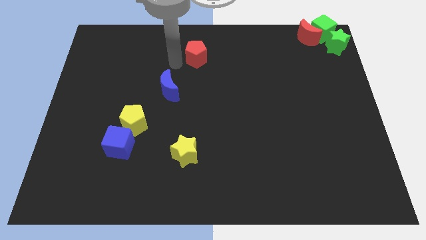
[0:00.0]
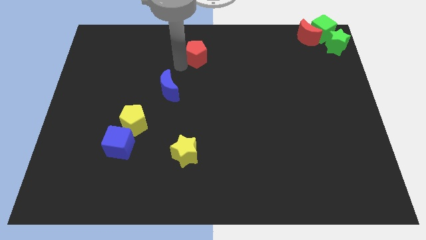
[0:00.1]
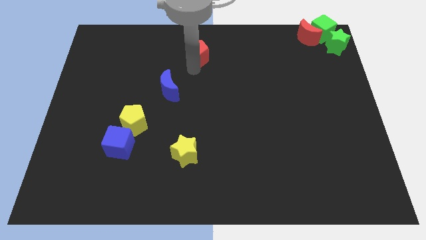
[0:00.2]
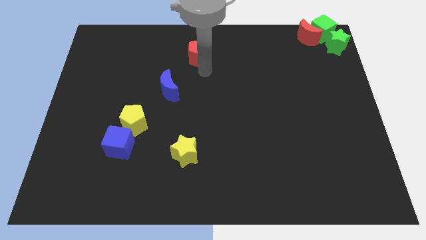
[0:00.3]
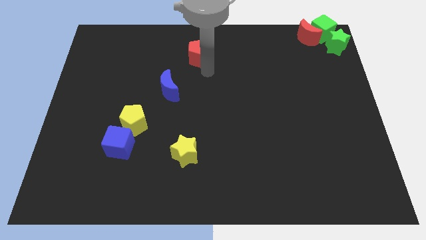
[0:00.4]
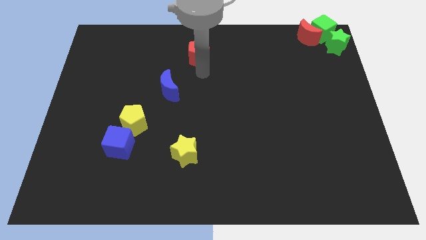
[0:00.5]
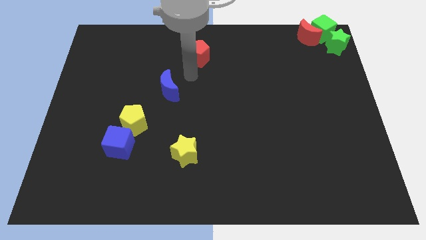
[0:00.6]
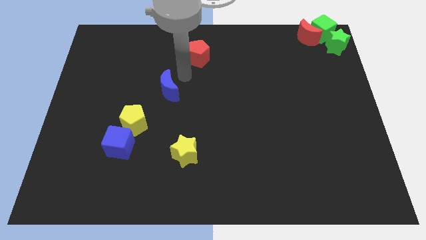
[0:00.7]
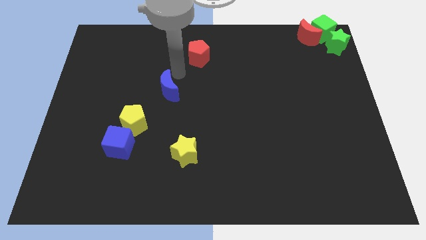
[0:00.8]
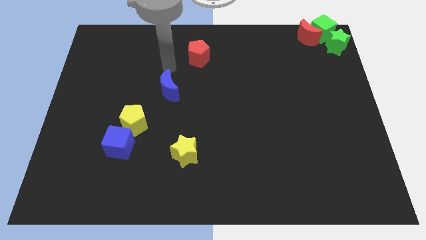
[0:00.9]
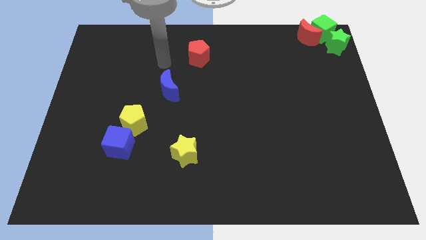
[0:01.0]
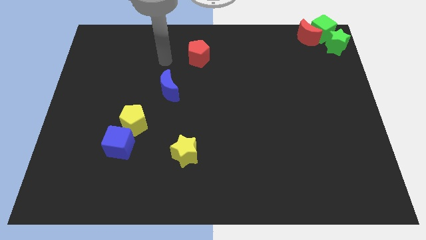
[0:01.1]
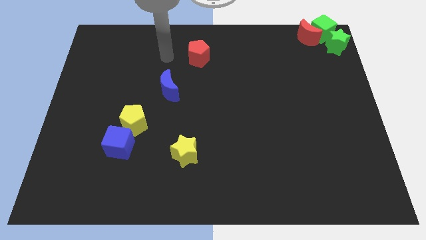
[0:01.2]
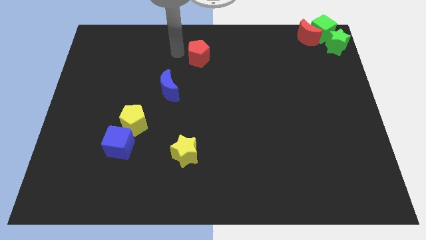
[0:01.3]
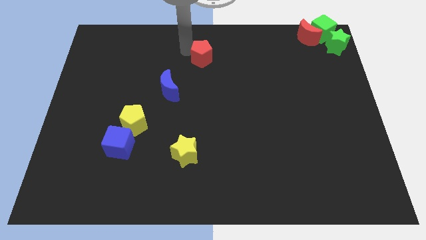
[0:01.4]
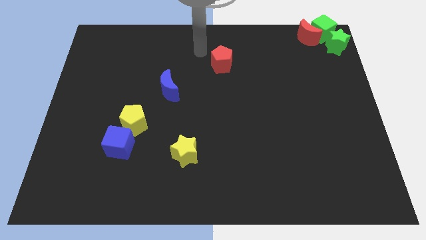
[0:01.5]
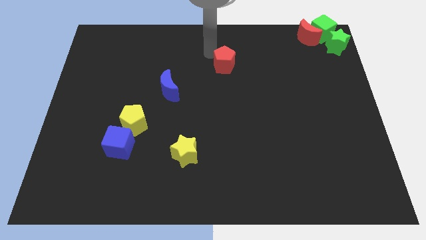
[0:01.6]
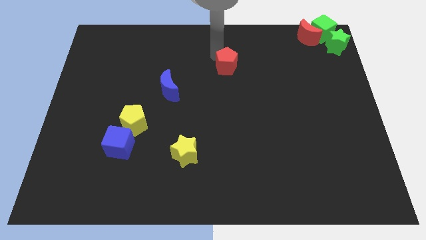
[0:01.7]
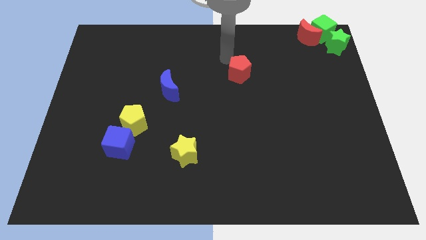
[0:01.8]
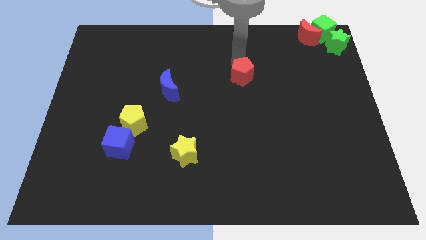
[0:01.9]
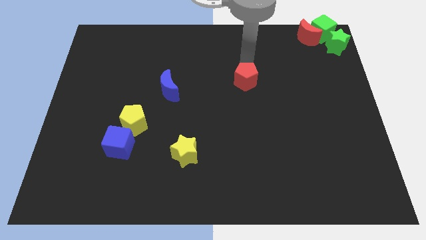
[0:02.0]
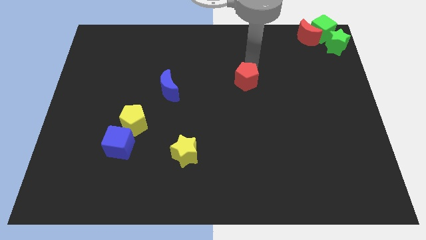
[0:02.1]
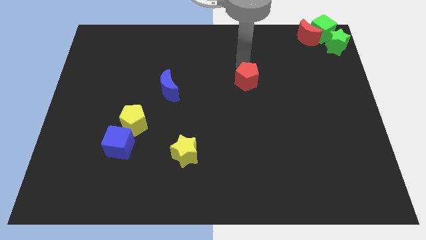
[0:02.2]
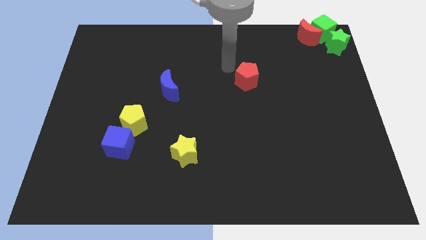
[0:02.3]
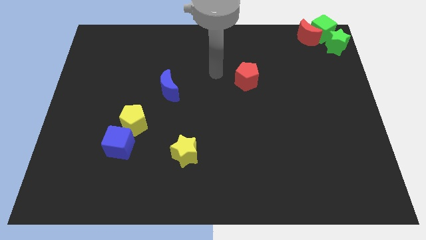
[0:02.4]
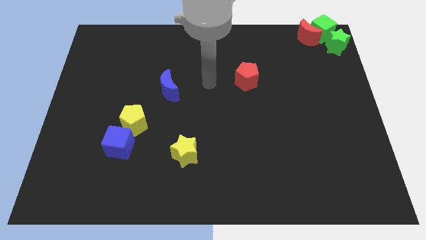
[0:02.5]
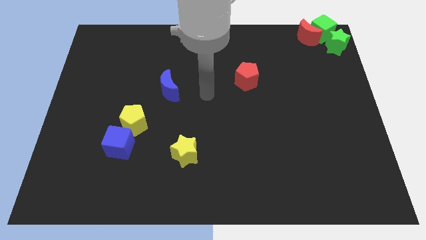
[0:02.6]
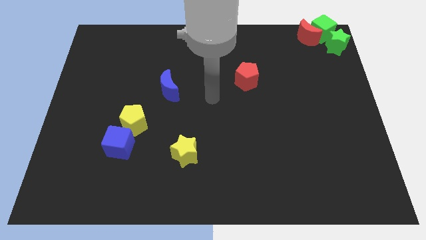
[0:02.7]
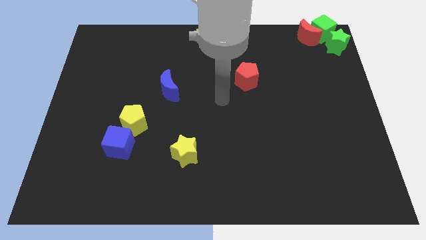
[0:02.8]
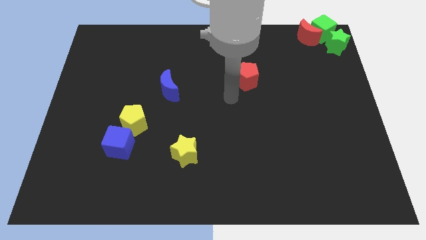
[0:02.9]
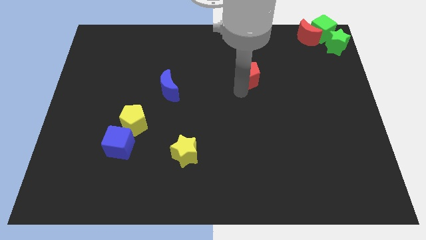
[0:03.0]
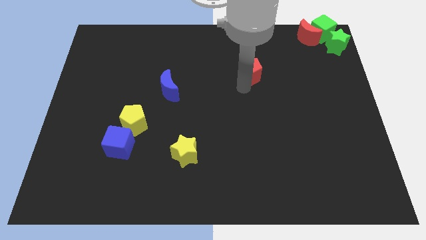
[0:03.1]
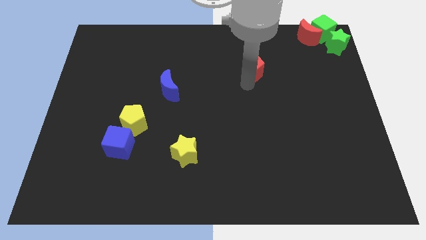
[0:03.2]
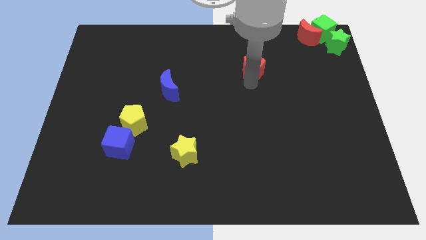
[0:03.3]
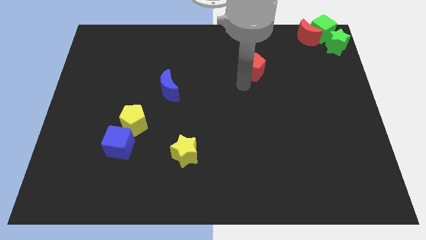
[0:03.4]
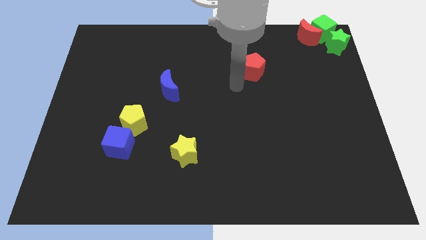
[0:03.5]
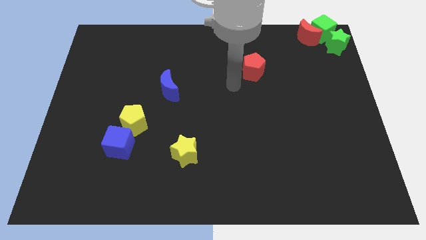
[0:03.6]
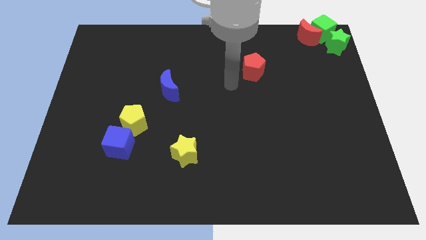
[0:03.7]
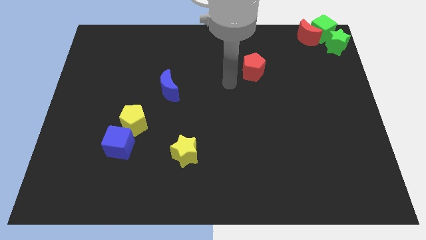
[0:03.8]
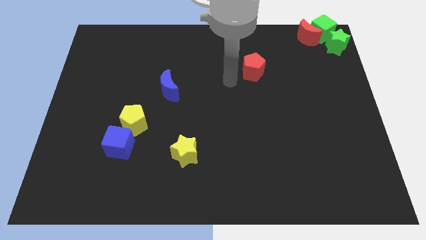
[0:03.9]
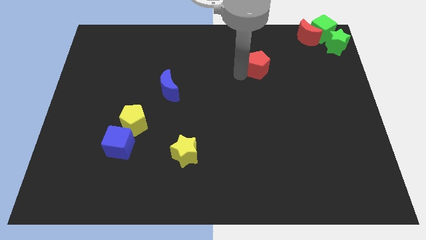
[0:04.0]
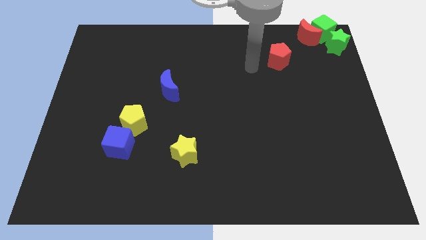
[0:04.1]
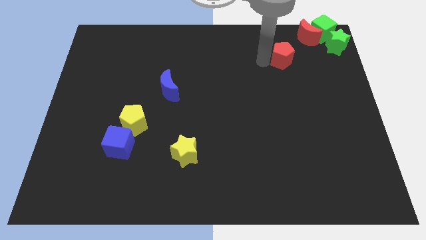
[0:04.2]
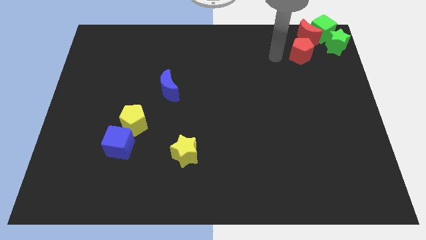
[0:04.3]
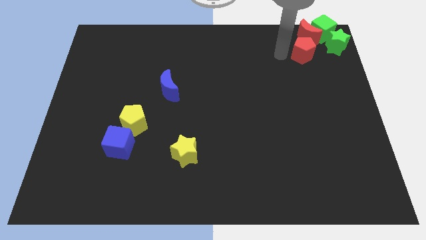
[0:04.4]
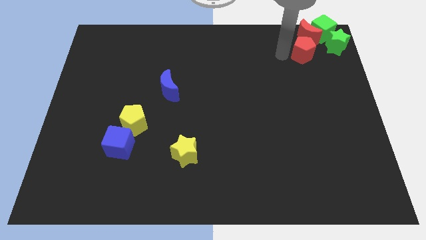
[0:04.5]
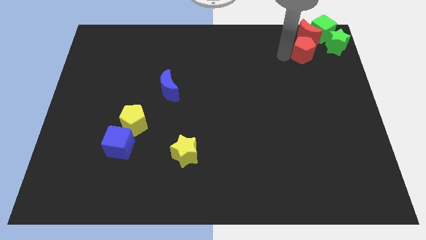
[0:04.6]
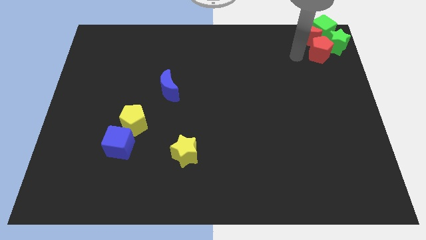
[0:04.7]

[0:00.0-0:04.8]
push the red pentagon to the bottom of the red crescent

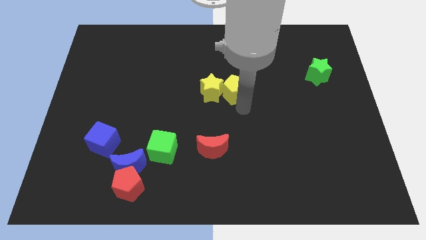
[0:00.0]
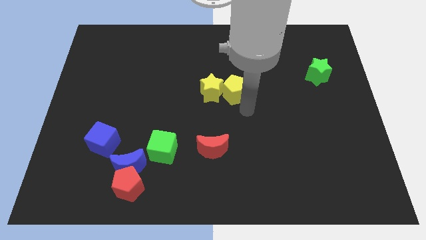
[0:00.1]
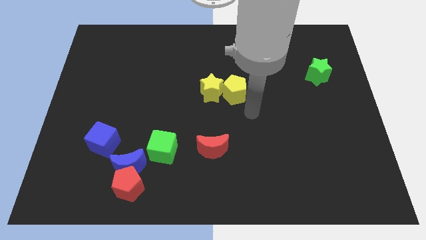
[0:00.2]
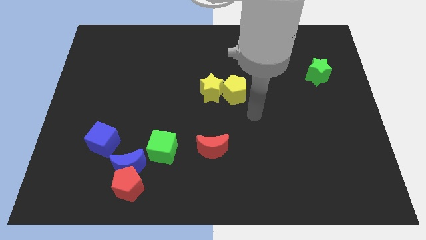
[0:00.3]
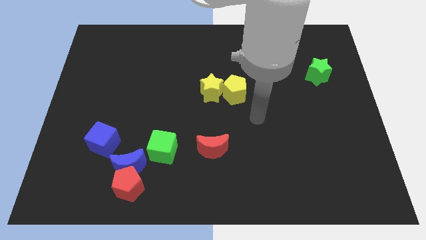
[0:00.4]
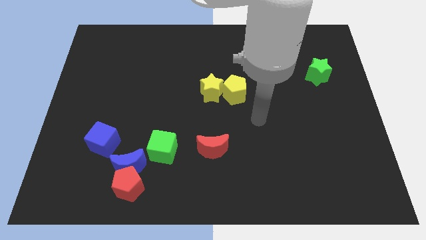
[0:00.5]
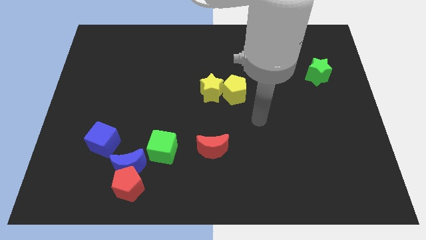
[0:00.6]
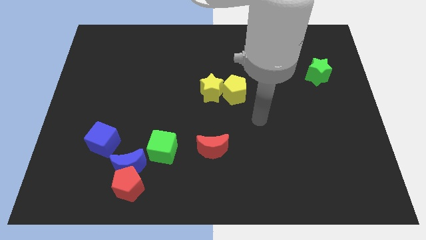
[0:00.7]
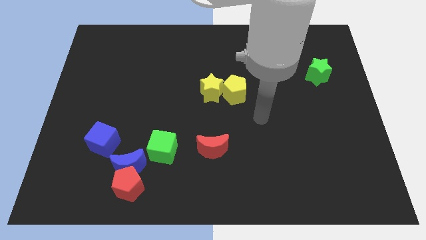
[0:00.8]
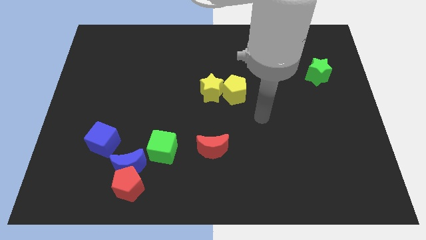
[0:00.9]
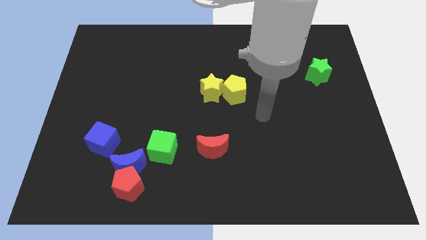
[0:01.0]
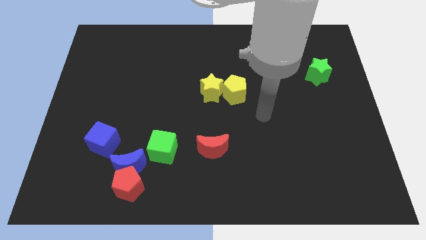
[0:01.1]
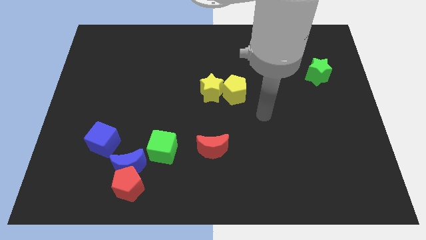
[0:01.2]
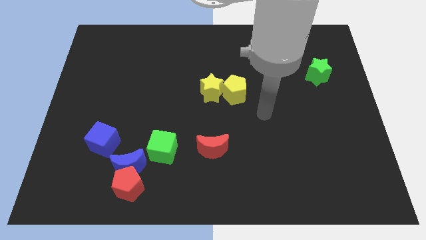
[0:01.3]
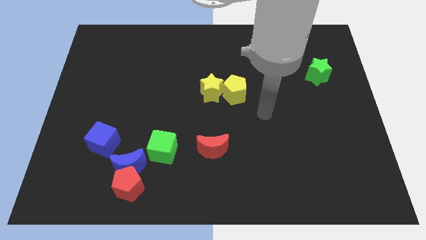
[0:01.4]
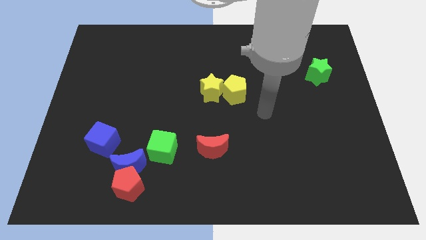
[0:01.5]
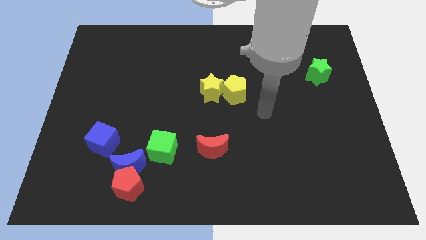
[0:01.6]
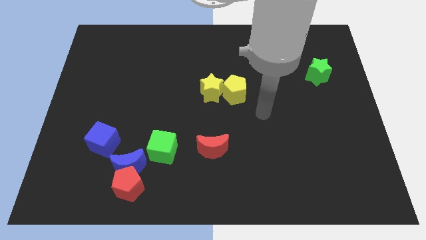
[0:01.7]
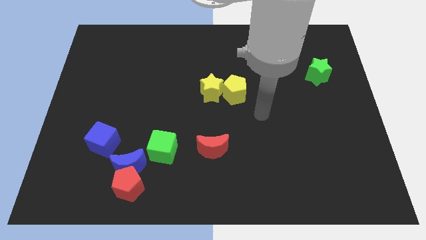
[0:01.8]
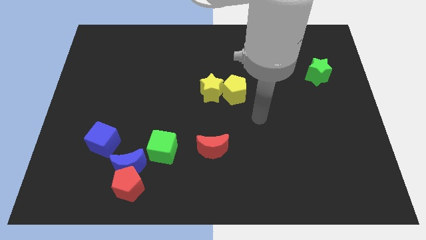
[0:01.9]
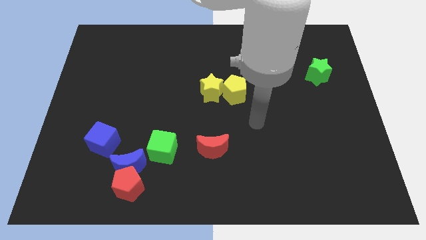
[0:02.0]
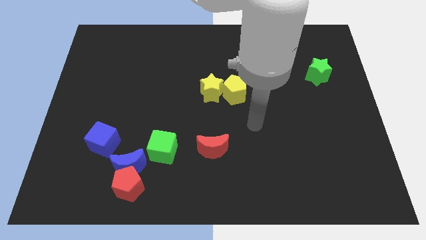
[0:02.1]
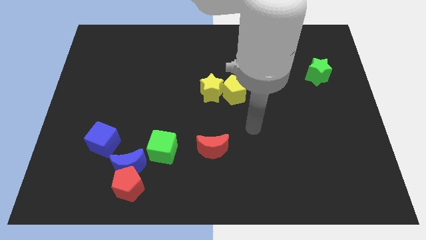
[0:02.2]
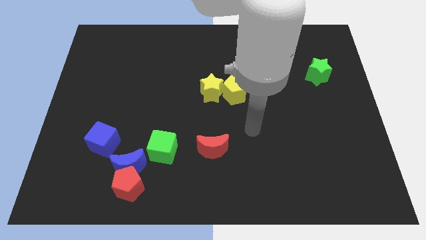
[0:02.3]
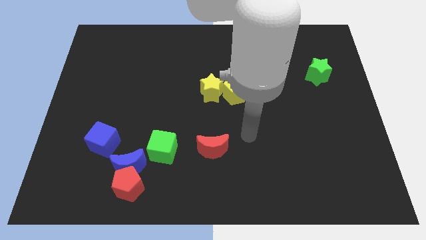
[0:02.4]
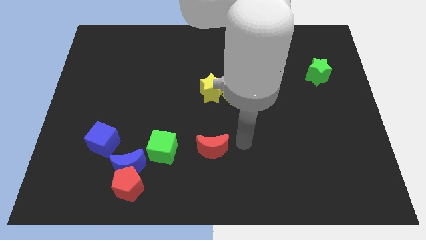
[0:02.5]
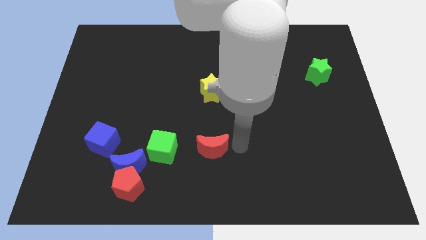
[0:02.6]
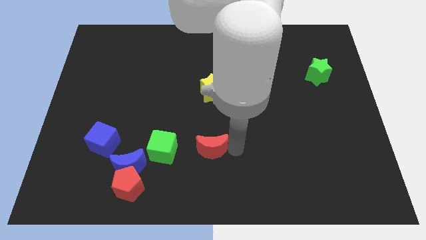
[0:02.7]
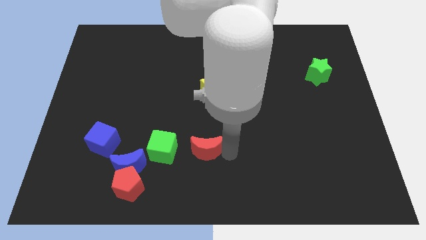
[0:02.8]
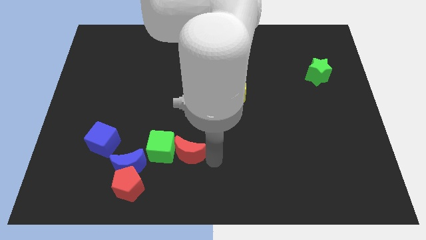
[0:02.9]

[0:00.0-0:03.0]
move your arm towards the red crescent

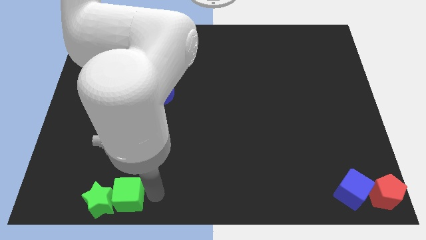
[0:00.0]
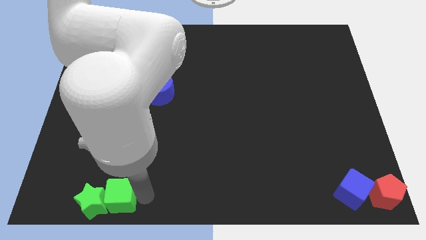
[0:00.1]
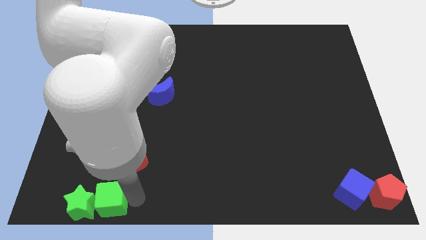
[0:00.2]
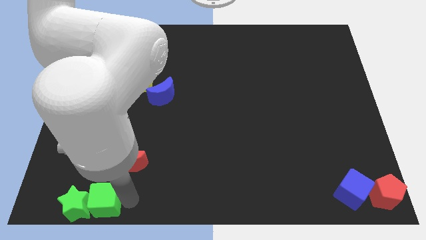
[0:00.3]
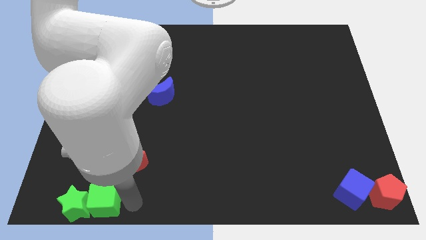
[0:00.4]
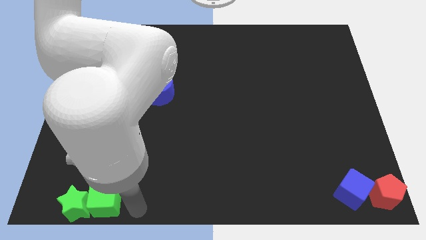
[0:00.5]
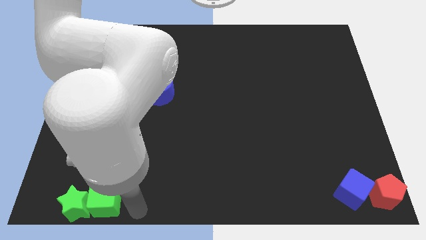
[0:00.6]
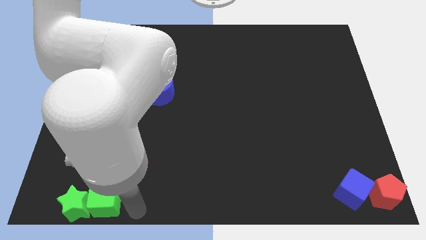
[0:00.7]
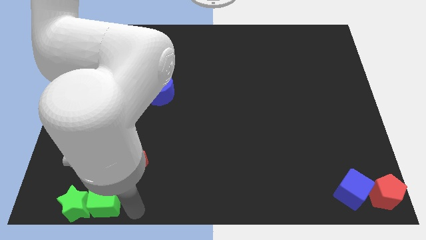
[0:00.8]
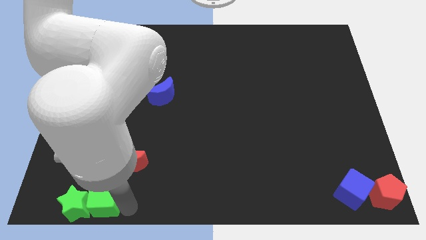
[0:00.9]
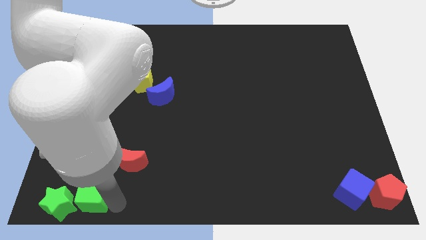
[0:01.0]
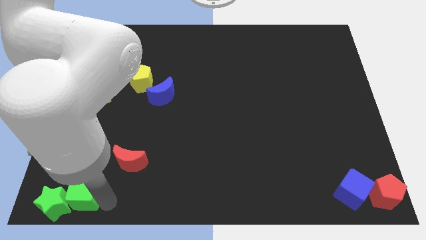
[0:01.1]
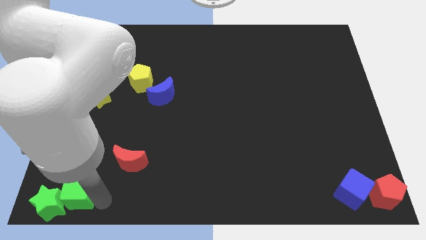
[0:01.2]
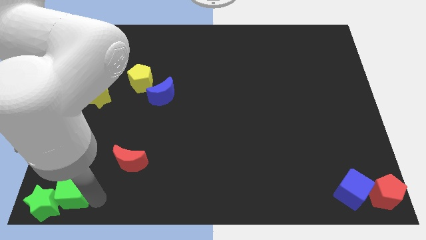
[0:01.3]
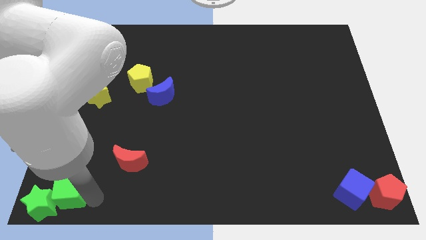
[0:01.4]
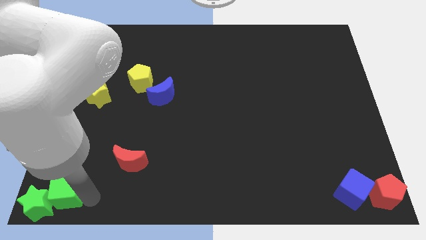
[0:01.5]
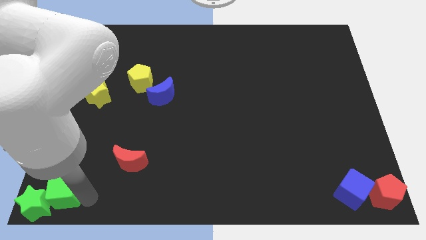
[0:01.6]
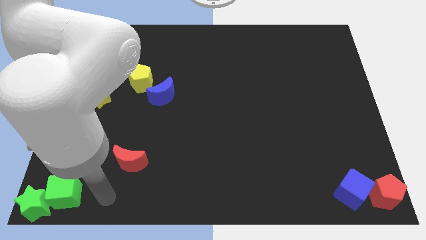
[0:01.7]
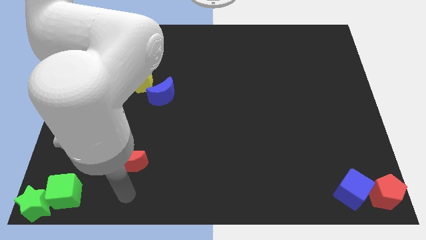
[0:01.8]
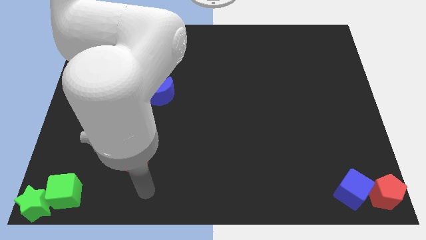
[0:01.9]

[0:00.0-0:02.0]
move the green cube along with the green star to the bottom left corner
